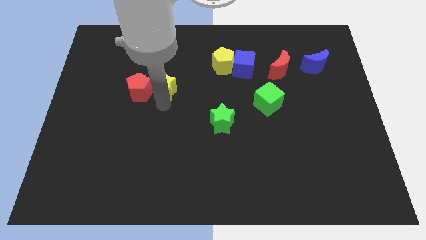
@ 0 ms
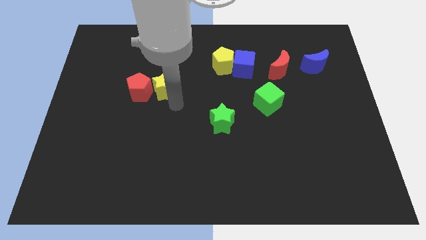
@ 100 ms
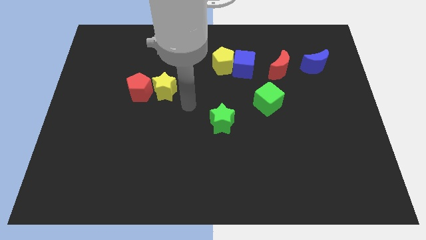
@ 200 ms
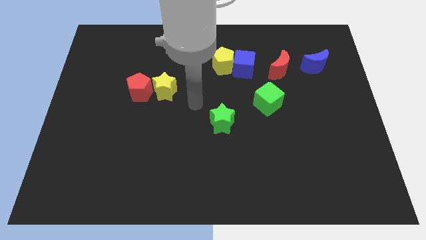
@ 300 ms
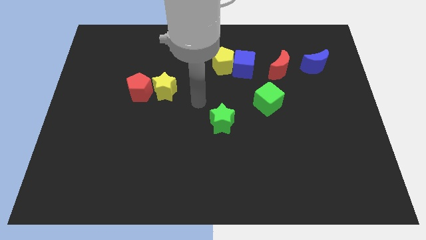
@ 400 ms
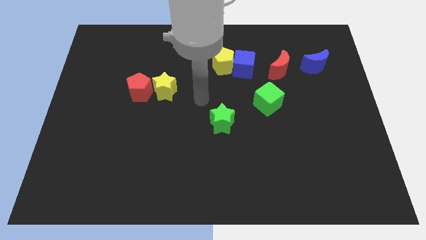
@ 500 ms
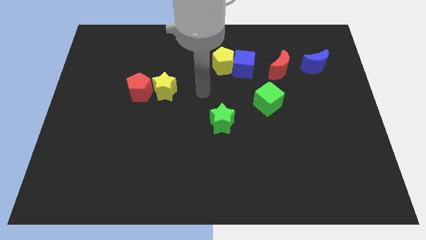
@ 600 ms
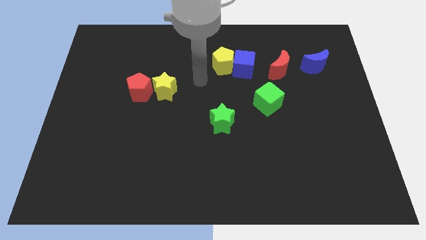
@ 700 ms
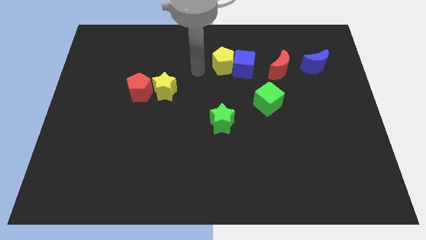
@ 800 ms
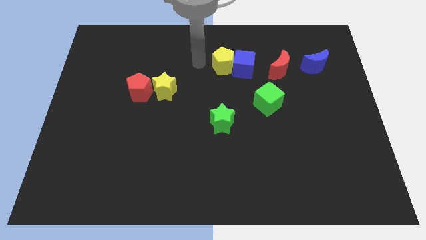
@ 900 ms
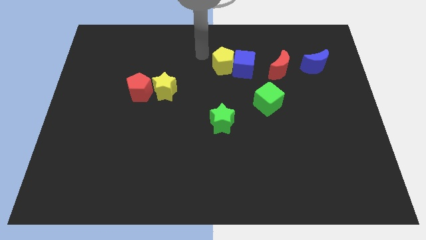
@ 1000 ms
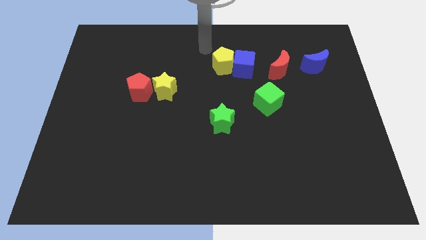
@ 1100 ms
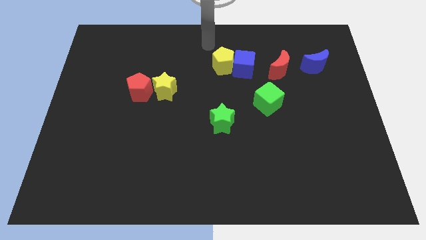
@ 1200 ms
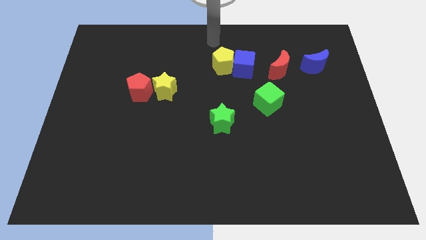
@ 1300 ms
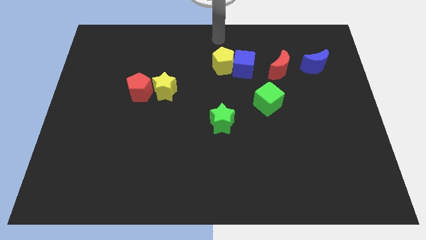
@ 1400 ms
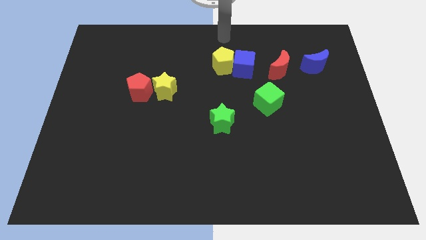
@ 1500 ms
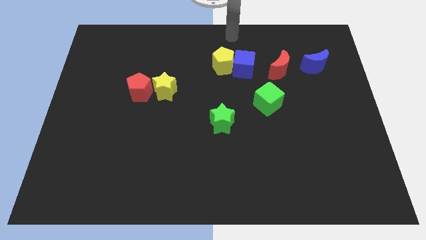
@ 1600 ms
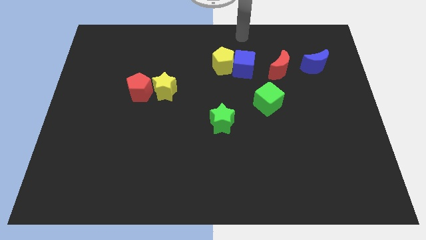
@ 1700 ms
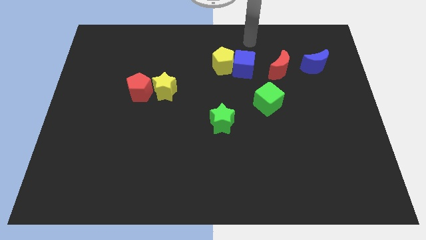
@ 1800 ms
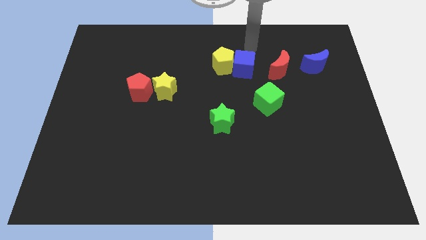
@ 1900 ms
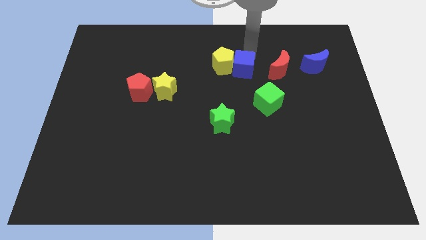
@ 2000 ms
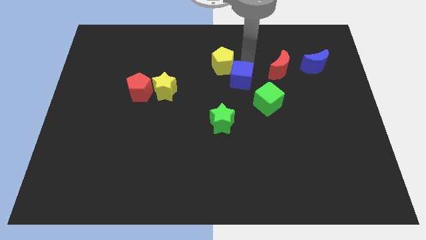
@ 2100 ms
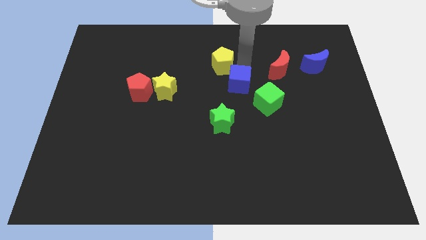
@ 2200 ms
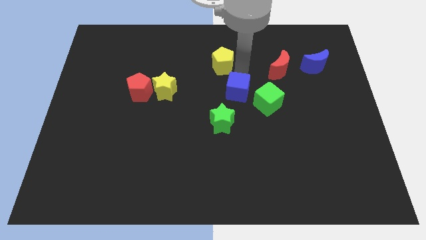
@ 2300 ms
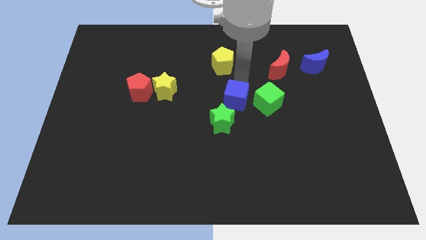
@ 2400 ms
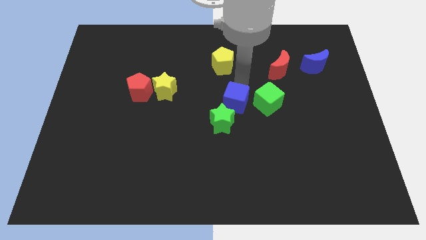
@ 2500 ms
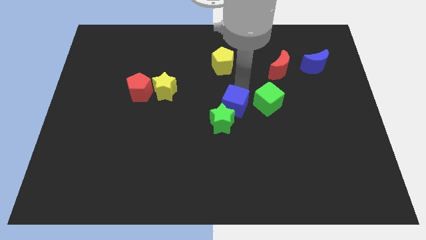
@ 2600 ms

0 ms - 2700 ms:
move blue cube parallel to the left to the green cube

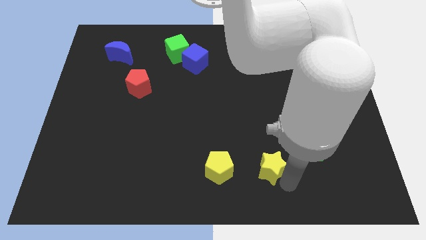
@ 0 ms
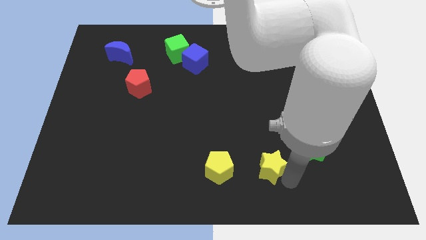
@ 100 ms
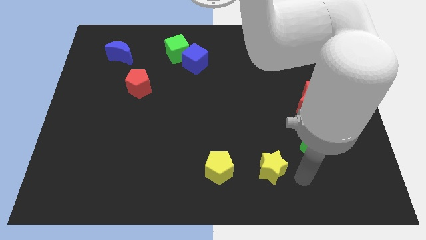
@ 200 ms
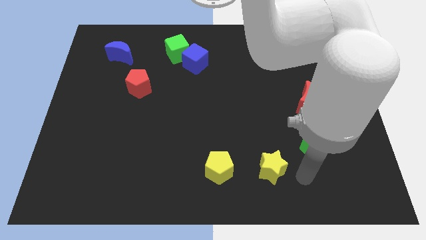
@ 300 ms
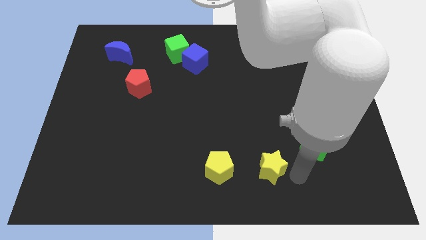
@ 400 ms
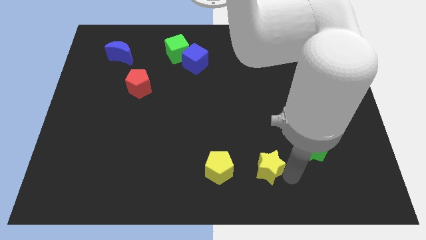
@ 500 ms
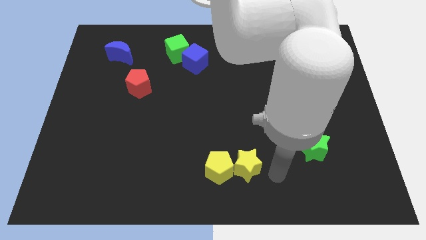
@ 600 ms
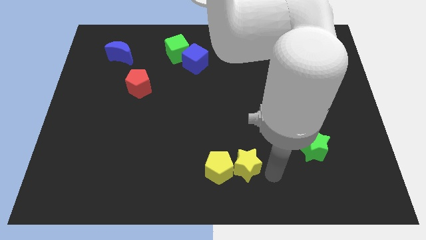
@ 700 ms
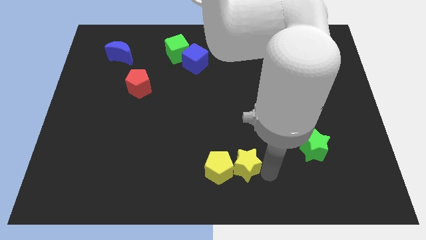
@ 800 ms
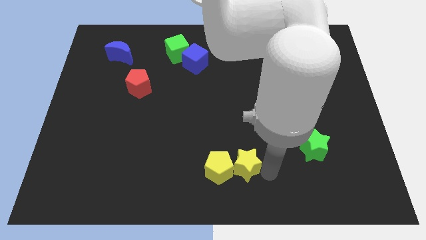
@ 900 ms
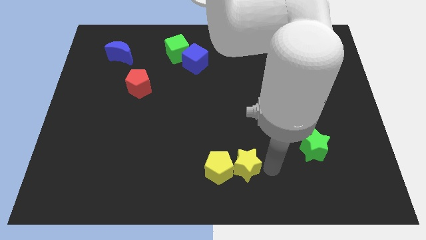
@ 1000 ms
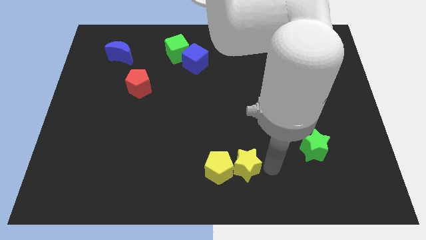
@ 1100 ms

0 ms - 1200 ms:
push the yellow star close to the yellow pentagon

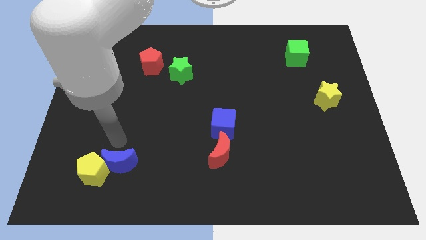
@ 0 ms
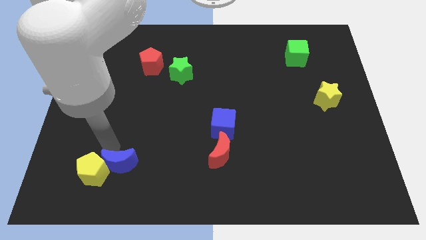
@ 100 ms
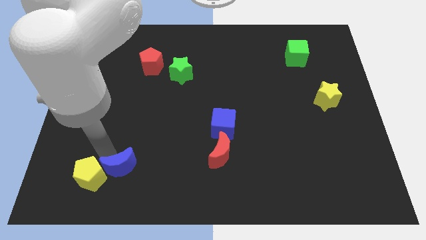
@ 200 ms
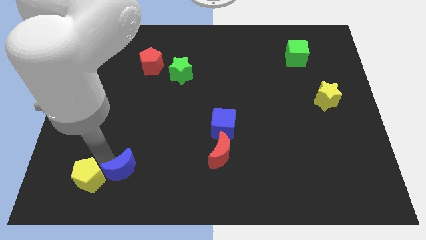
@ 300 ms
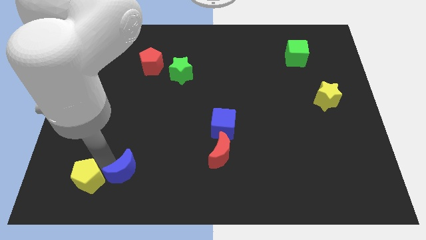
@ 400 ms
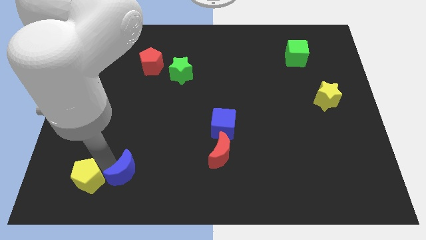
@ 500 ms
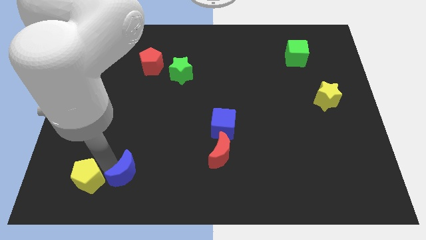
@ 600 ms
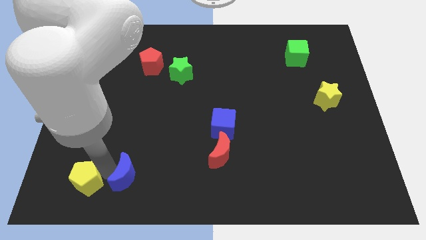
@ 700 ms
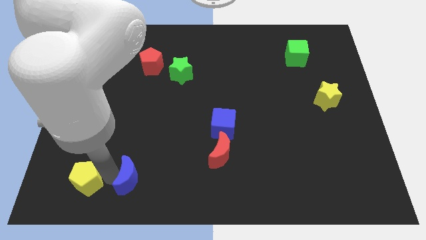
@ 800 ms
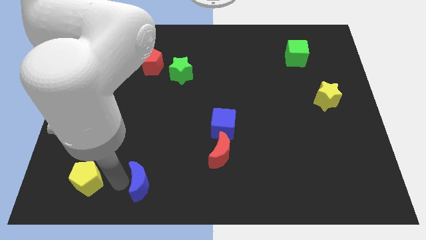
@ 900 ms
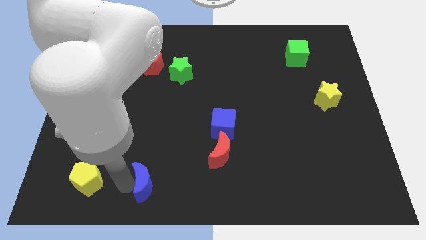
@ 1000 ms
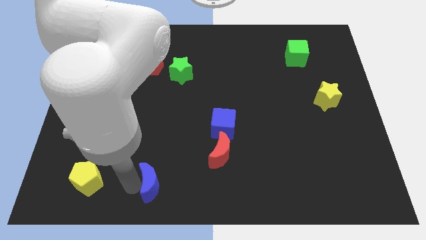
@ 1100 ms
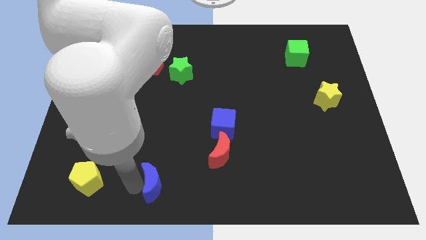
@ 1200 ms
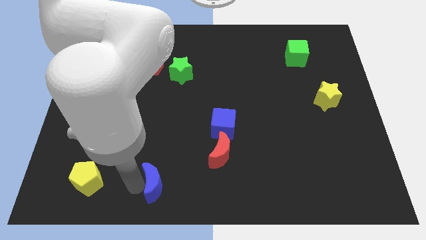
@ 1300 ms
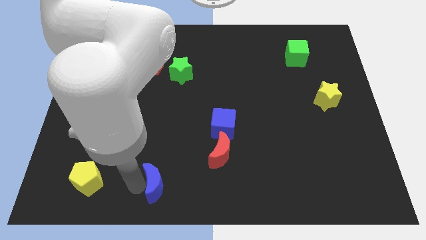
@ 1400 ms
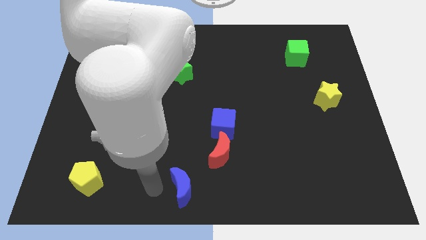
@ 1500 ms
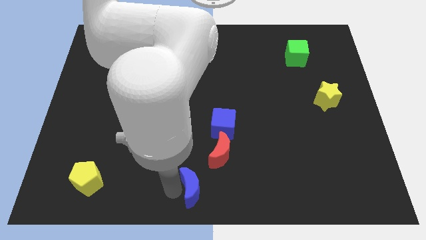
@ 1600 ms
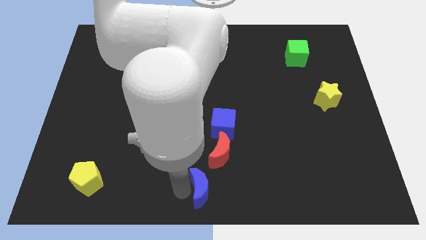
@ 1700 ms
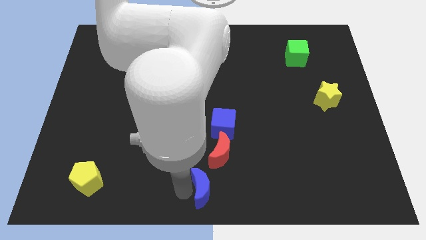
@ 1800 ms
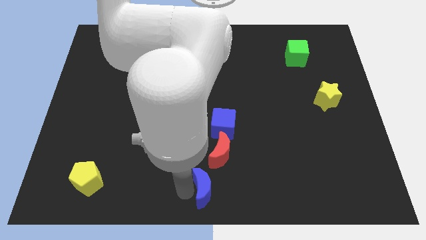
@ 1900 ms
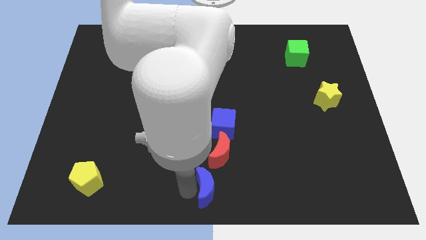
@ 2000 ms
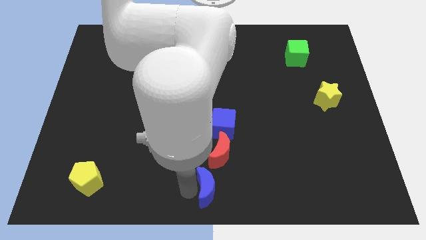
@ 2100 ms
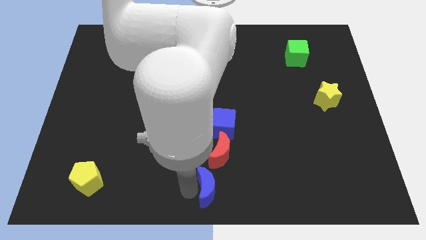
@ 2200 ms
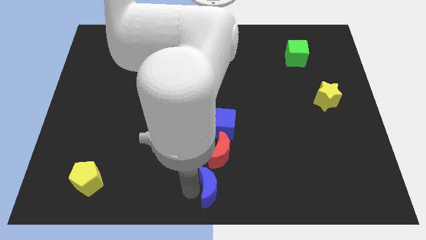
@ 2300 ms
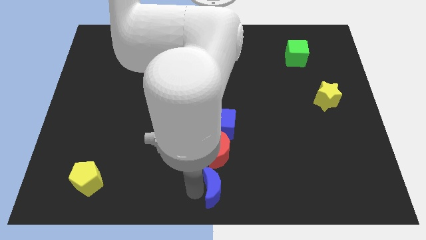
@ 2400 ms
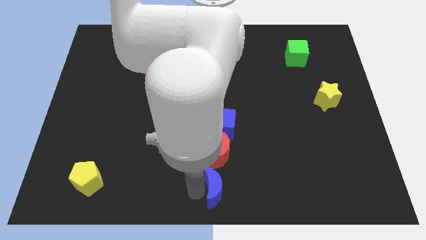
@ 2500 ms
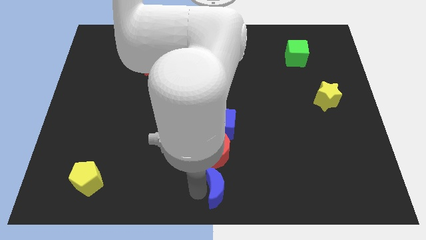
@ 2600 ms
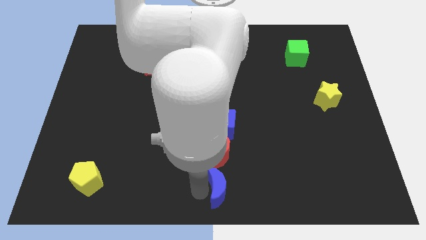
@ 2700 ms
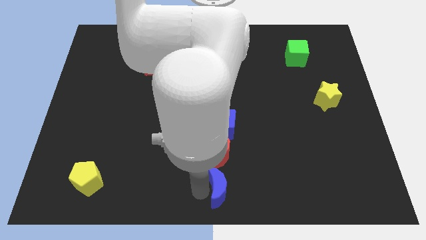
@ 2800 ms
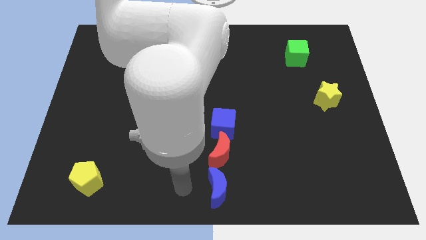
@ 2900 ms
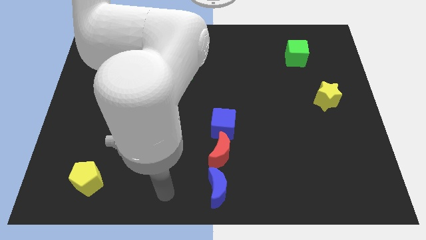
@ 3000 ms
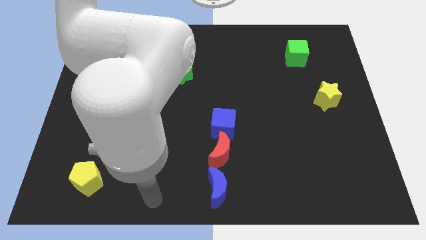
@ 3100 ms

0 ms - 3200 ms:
push the blue moon at the bottom of red moon

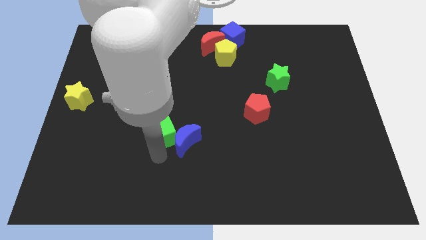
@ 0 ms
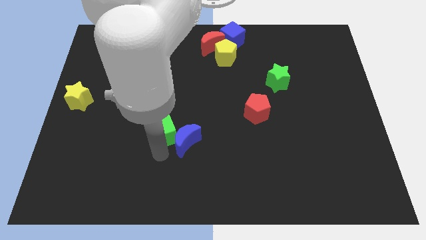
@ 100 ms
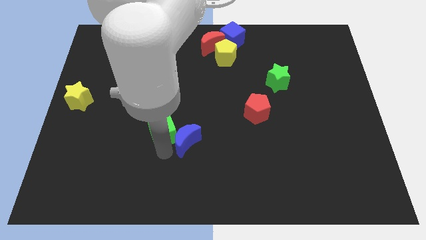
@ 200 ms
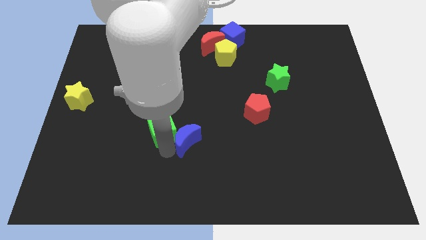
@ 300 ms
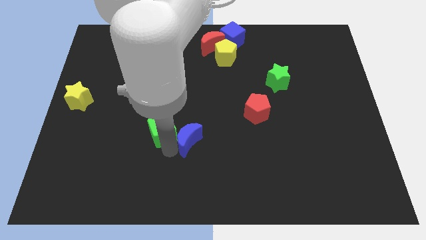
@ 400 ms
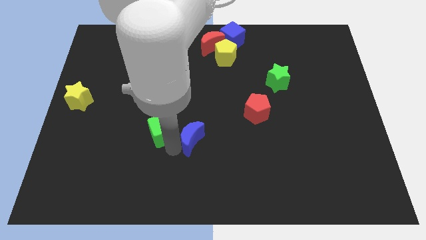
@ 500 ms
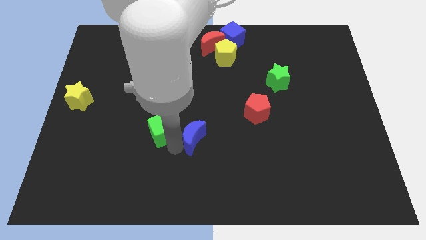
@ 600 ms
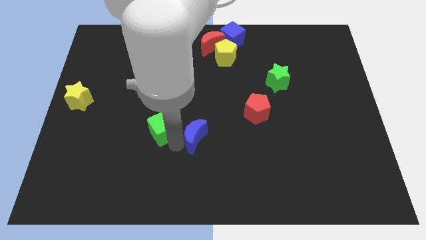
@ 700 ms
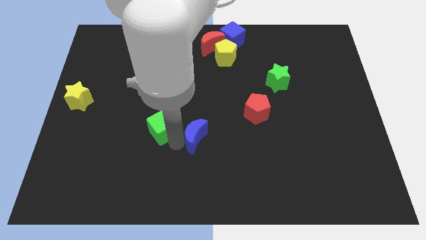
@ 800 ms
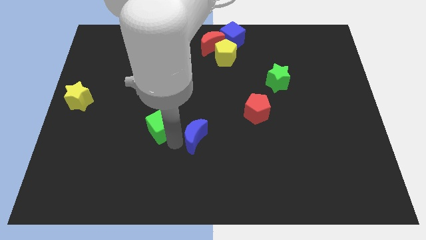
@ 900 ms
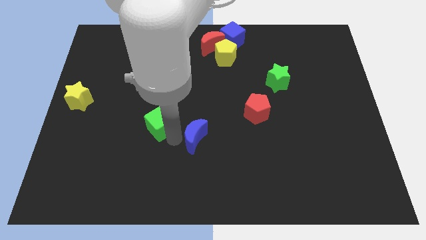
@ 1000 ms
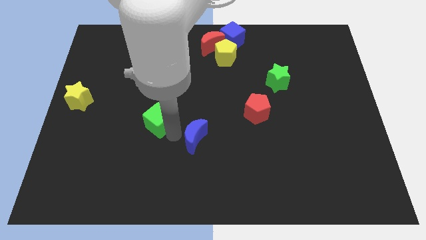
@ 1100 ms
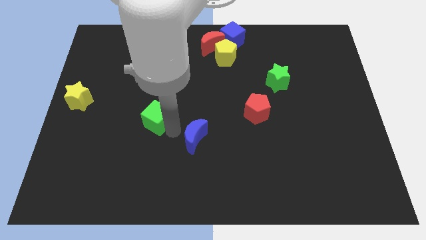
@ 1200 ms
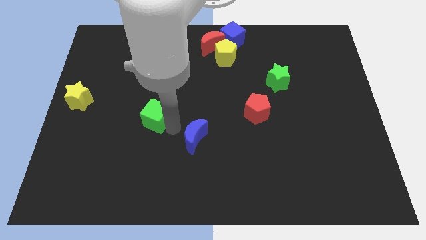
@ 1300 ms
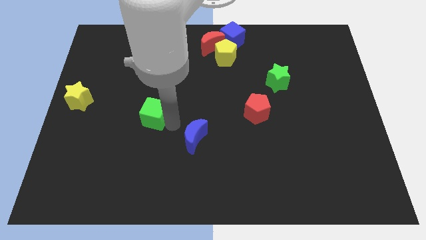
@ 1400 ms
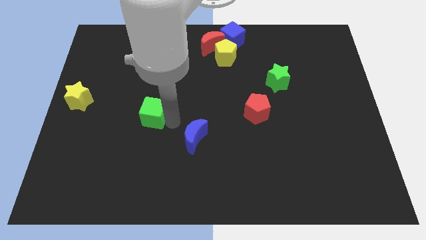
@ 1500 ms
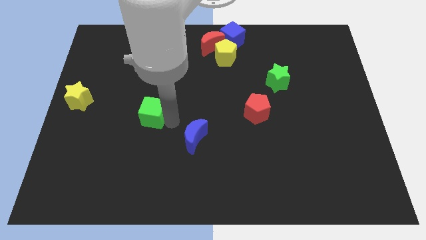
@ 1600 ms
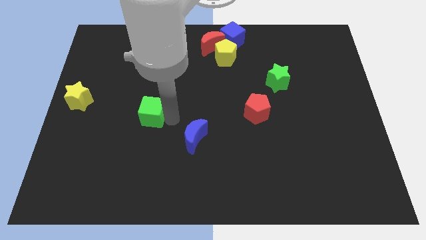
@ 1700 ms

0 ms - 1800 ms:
separate the green cube from the blue crescent
